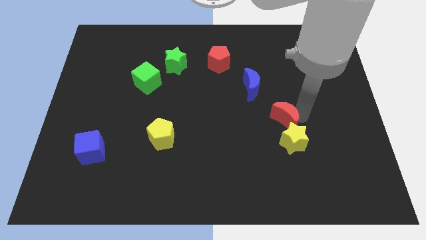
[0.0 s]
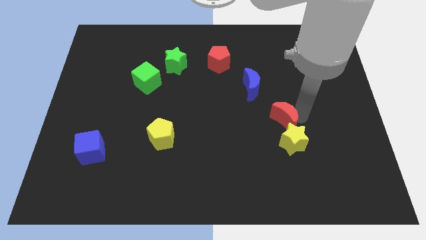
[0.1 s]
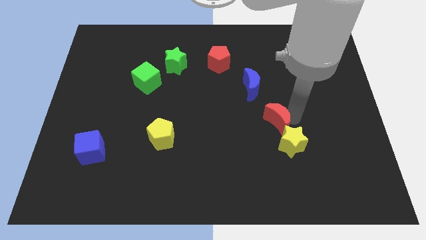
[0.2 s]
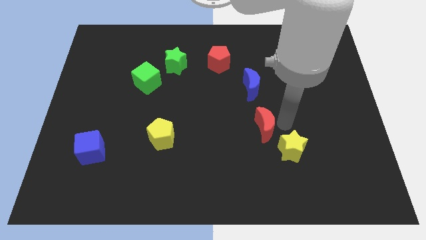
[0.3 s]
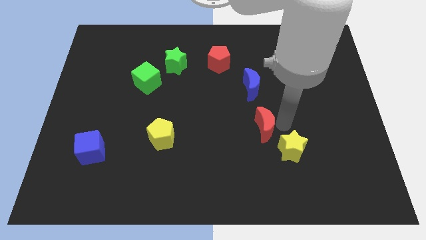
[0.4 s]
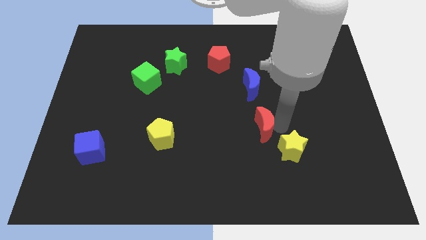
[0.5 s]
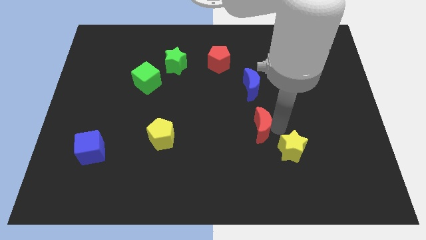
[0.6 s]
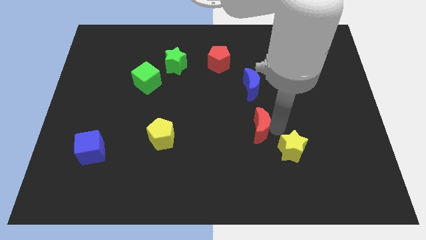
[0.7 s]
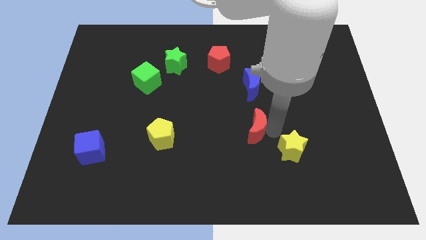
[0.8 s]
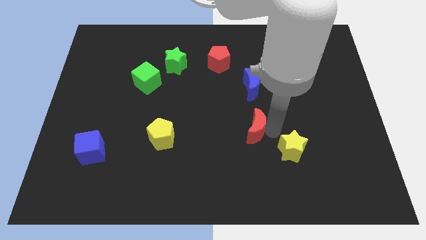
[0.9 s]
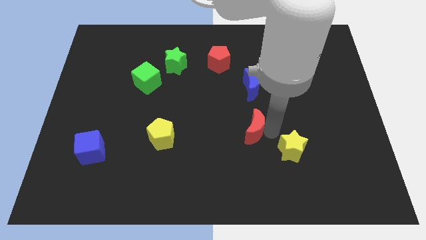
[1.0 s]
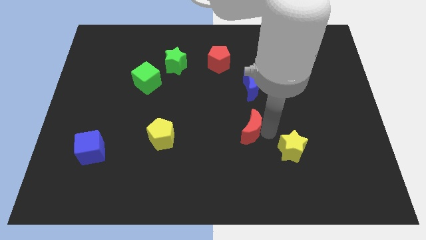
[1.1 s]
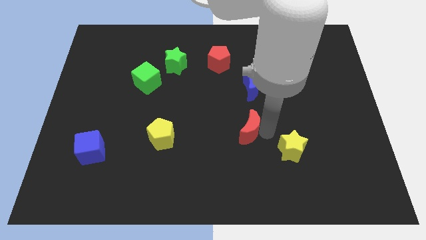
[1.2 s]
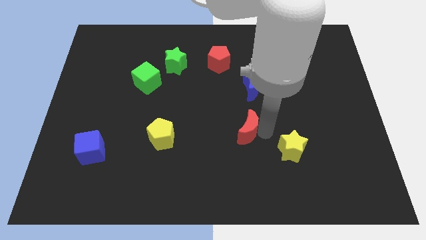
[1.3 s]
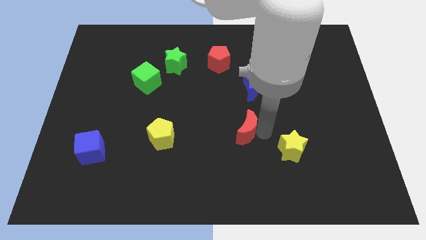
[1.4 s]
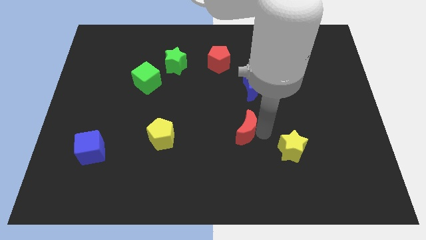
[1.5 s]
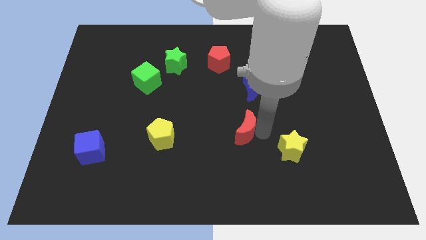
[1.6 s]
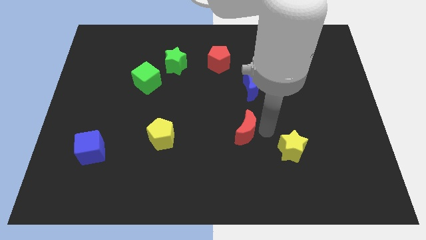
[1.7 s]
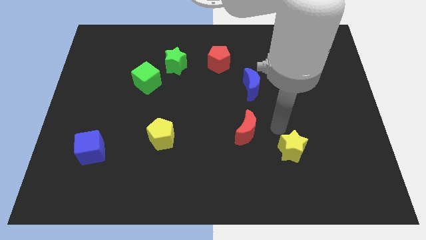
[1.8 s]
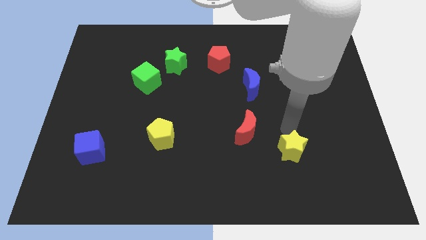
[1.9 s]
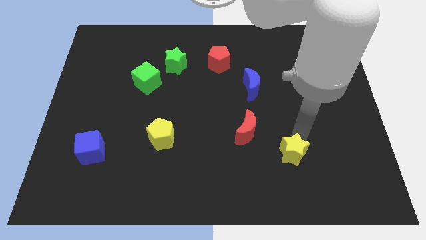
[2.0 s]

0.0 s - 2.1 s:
place red moon below to the blue moon

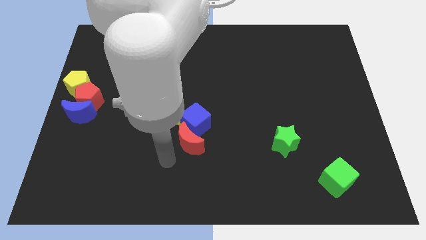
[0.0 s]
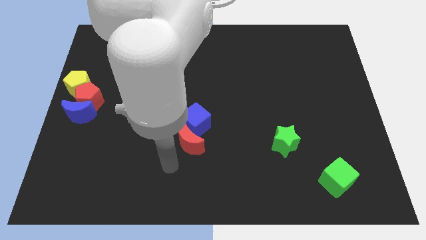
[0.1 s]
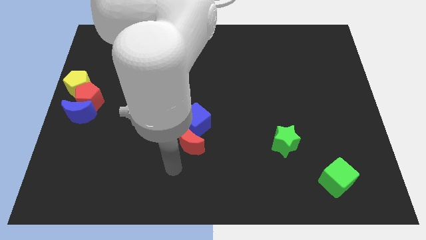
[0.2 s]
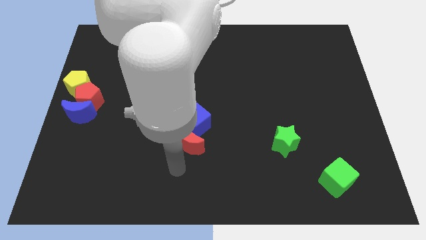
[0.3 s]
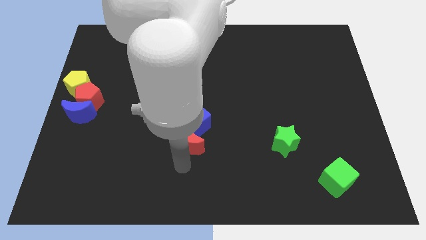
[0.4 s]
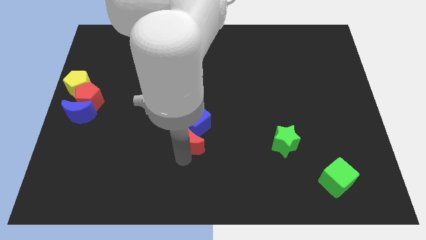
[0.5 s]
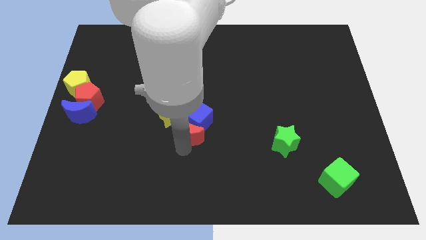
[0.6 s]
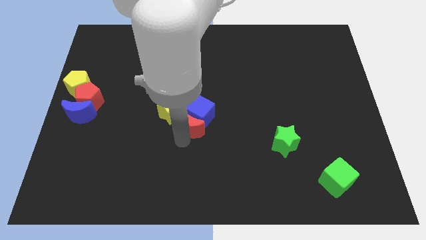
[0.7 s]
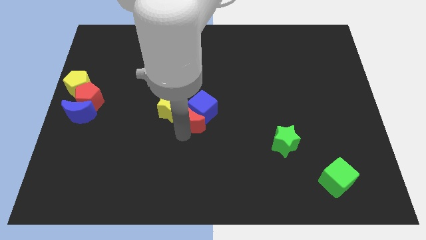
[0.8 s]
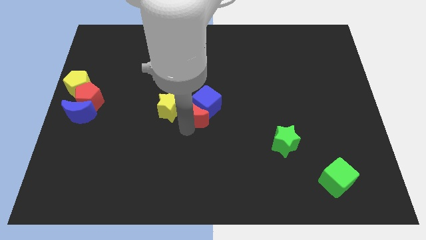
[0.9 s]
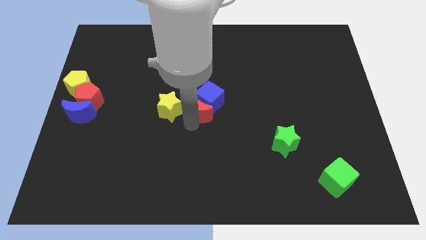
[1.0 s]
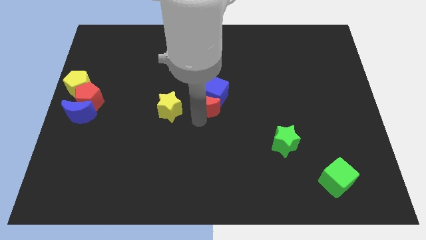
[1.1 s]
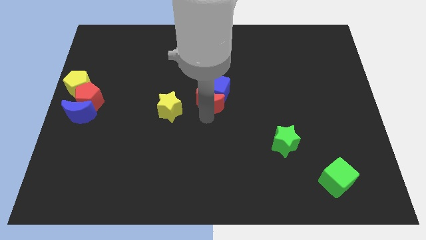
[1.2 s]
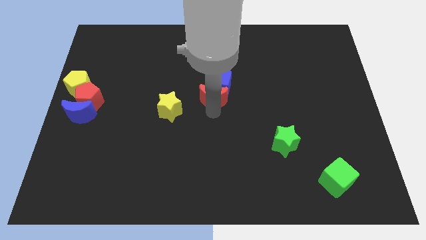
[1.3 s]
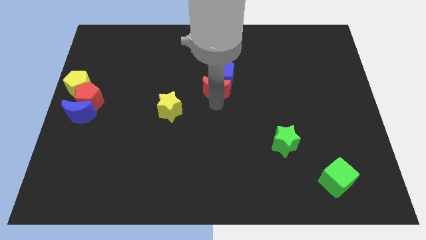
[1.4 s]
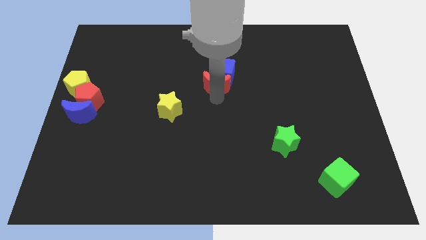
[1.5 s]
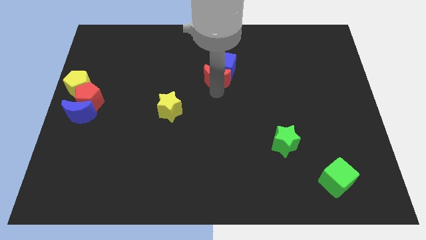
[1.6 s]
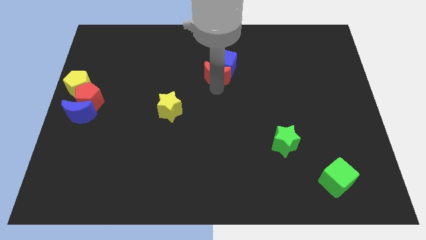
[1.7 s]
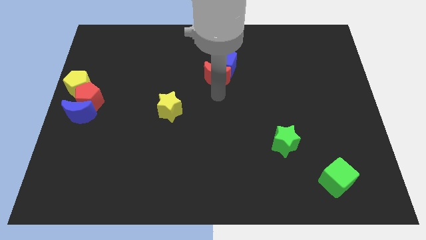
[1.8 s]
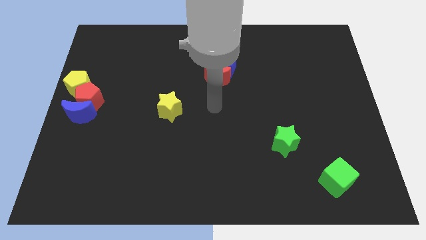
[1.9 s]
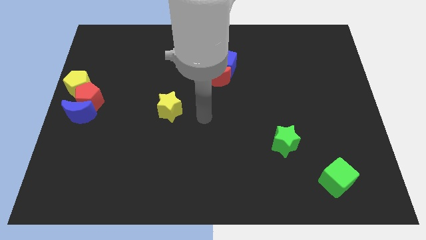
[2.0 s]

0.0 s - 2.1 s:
push the red moon and blue cube upwards

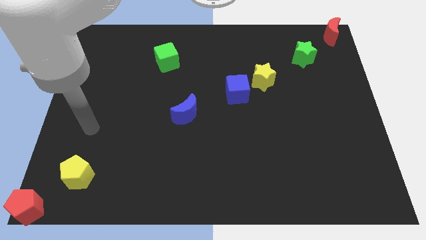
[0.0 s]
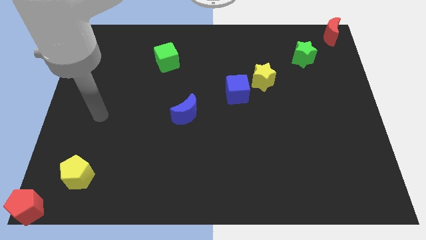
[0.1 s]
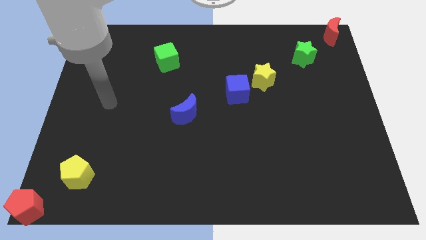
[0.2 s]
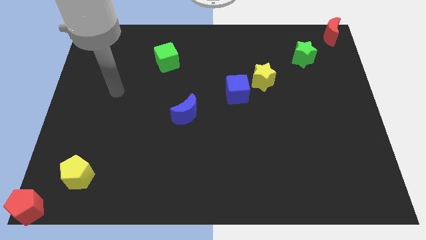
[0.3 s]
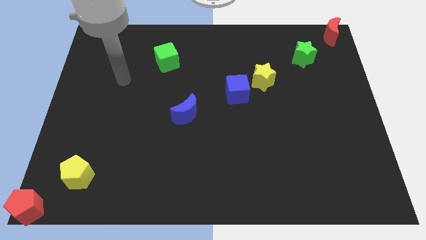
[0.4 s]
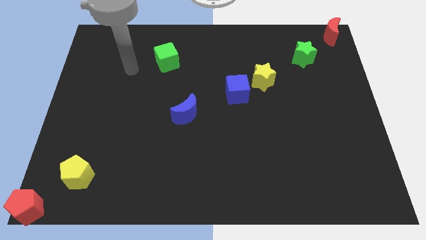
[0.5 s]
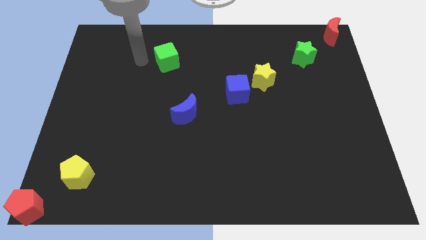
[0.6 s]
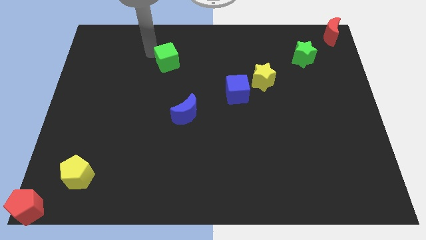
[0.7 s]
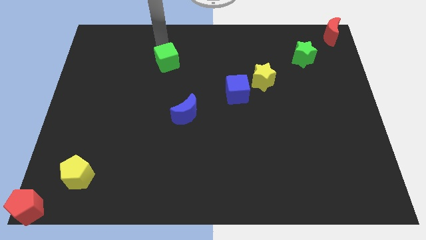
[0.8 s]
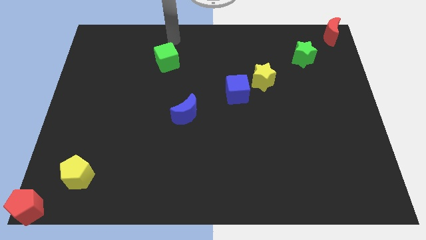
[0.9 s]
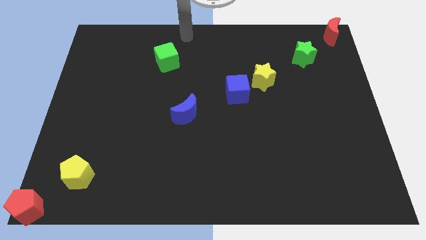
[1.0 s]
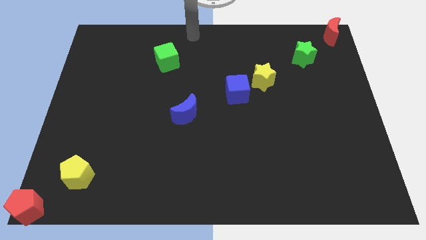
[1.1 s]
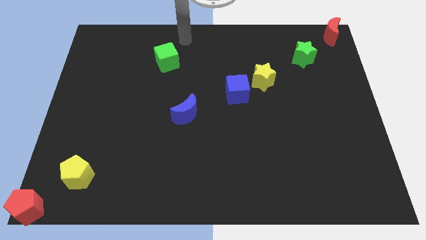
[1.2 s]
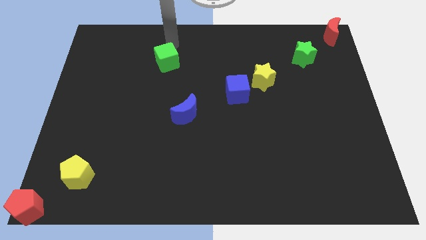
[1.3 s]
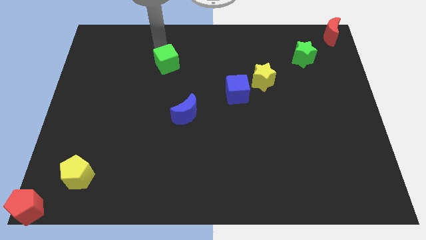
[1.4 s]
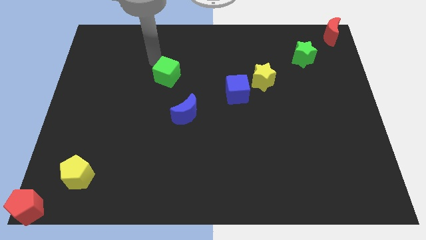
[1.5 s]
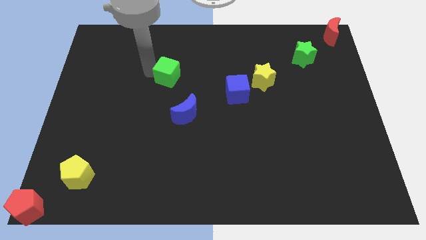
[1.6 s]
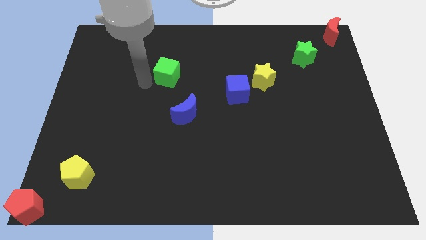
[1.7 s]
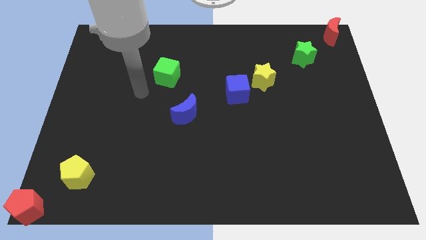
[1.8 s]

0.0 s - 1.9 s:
move the green cube towards bottom

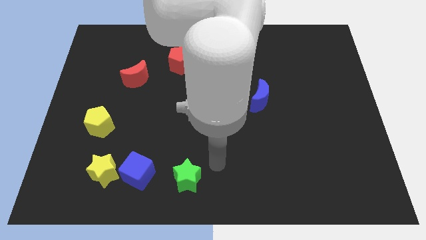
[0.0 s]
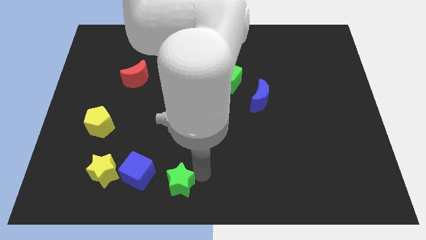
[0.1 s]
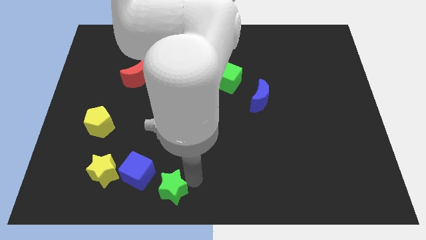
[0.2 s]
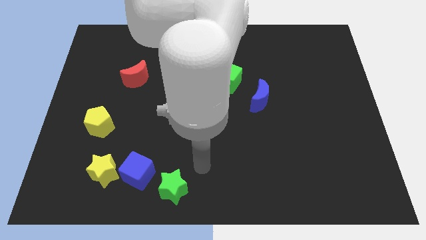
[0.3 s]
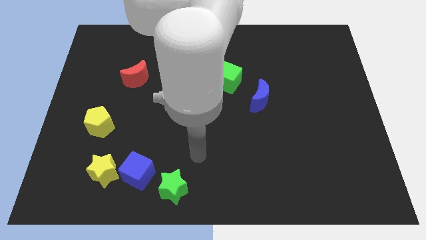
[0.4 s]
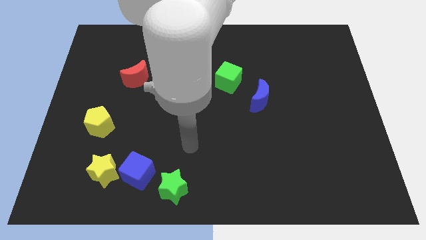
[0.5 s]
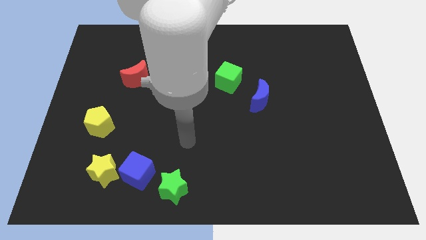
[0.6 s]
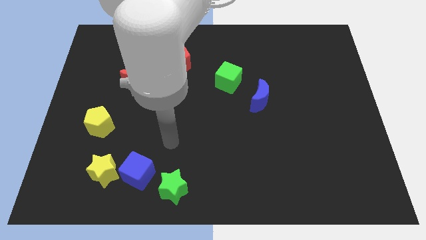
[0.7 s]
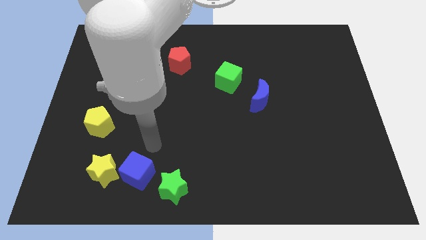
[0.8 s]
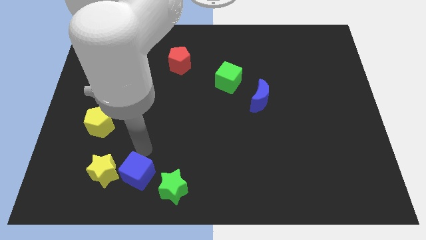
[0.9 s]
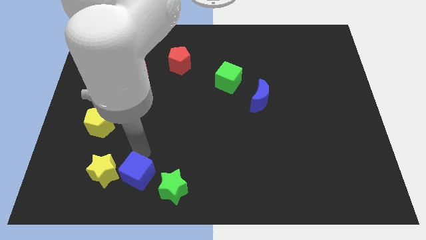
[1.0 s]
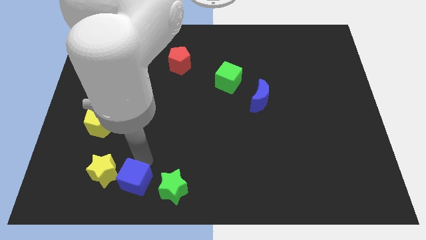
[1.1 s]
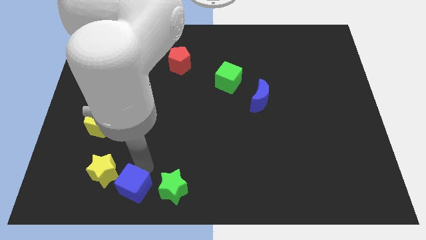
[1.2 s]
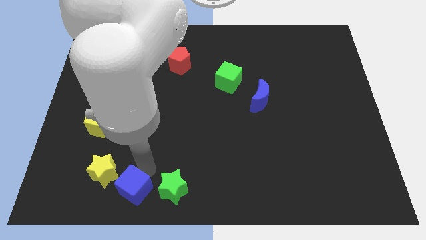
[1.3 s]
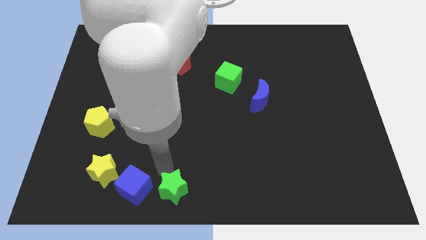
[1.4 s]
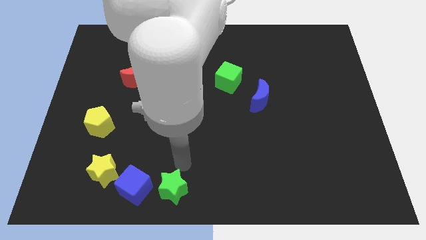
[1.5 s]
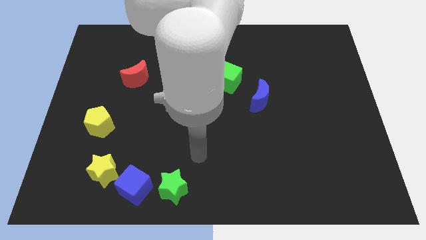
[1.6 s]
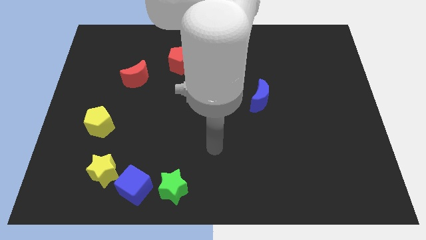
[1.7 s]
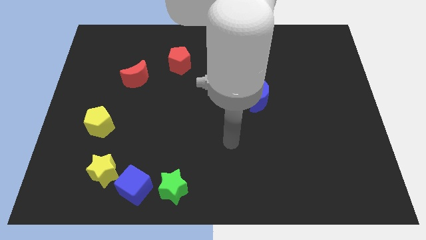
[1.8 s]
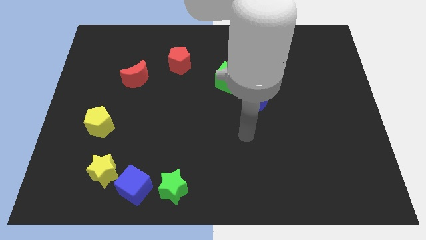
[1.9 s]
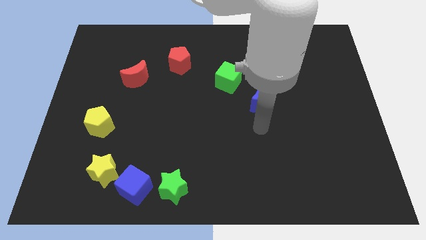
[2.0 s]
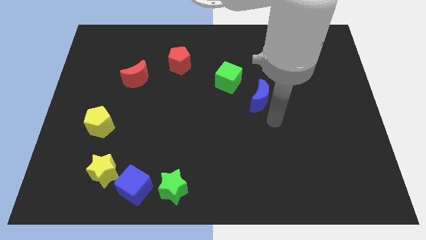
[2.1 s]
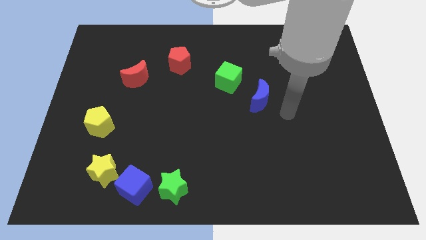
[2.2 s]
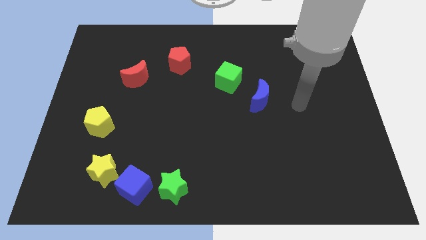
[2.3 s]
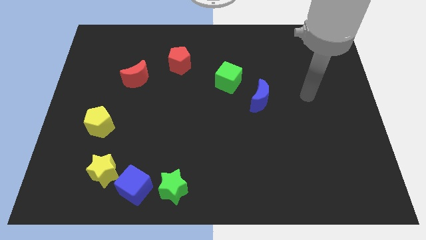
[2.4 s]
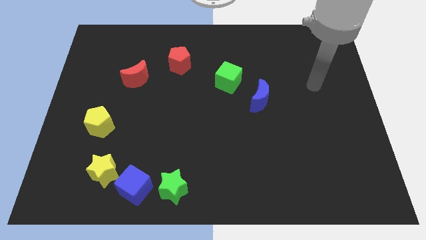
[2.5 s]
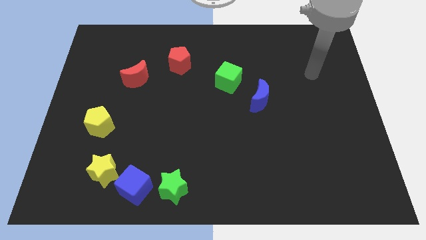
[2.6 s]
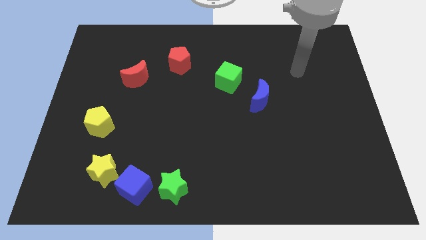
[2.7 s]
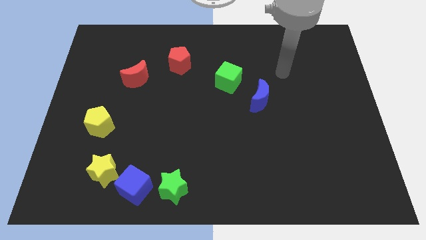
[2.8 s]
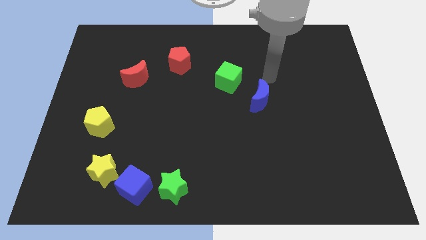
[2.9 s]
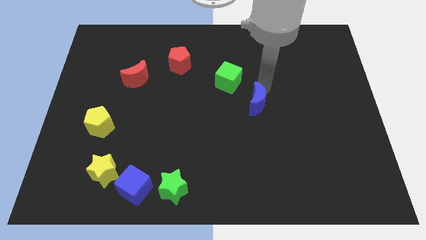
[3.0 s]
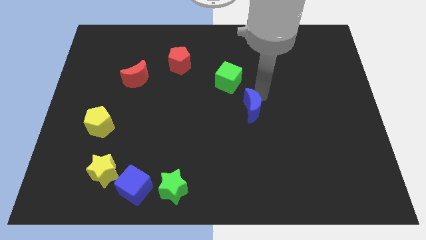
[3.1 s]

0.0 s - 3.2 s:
slide the blue cube vertically at the left side of the green star
